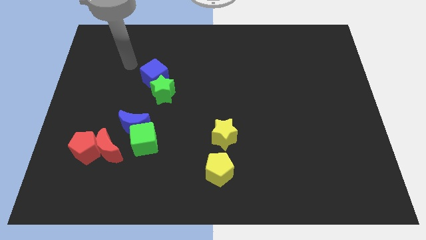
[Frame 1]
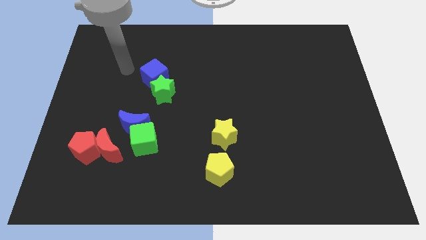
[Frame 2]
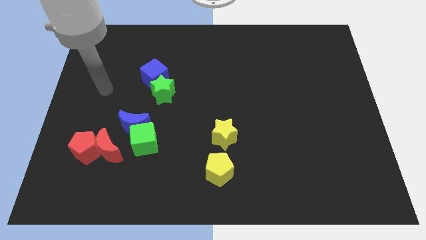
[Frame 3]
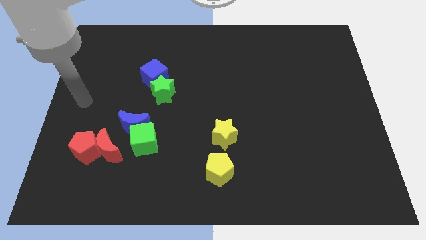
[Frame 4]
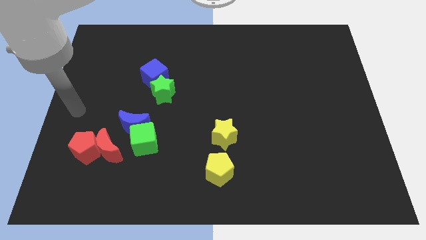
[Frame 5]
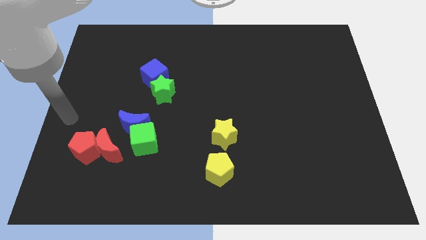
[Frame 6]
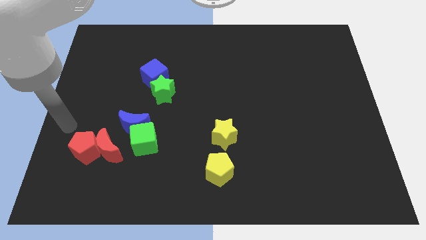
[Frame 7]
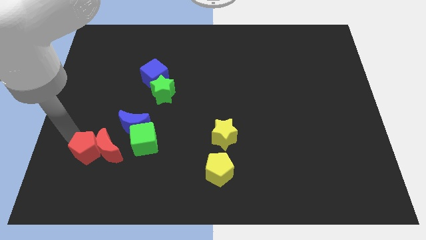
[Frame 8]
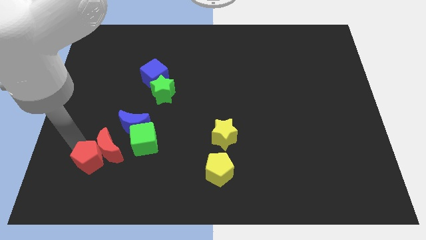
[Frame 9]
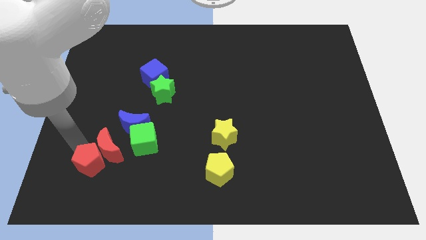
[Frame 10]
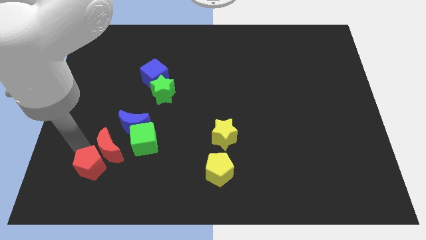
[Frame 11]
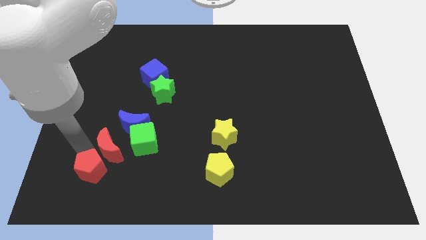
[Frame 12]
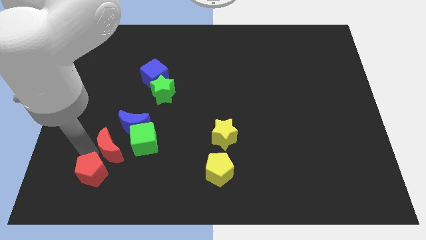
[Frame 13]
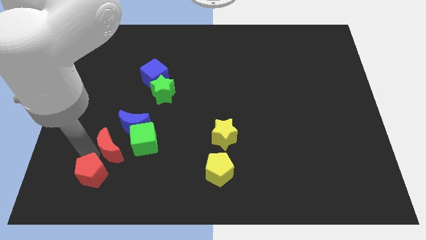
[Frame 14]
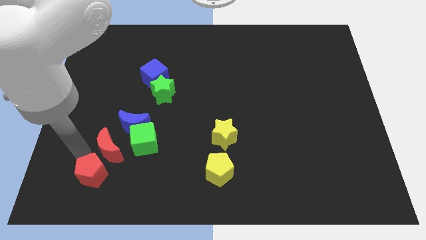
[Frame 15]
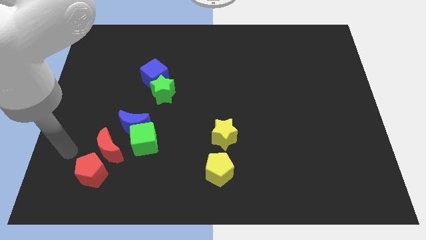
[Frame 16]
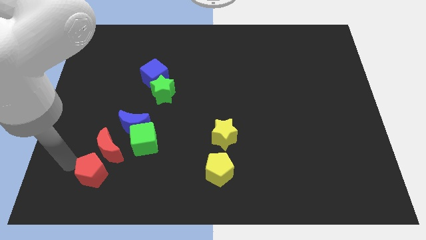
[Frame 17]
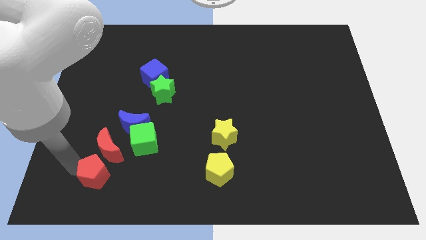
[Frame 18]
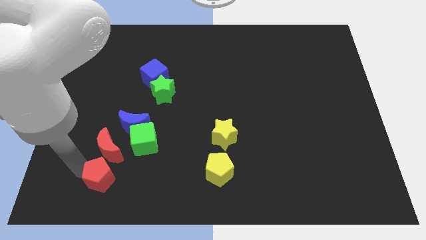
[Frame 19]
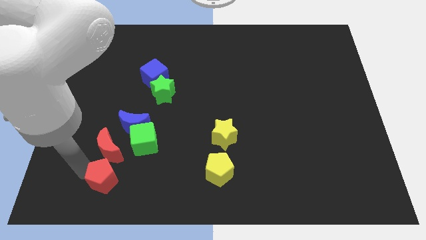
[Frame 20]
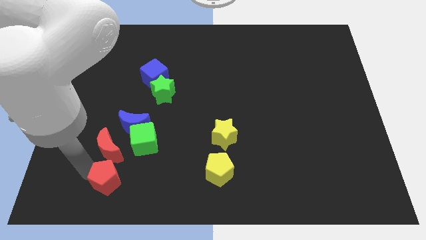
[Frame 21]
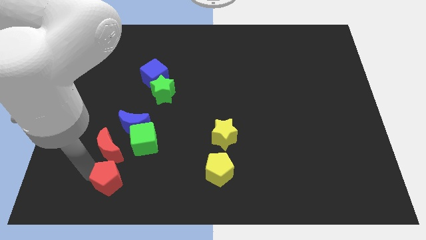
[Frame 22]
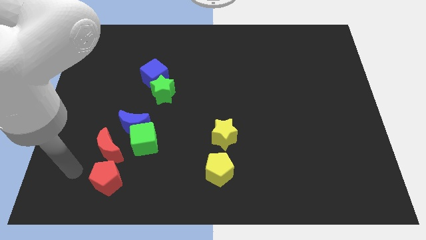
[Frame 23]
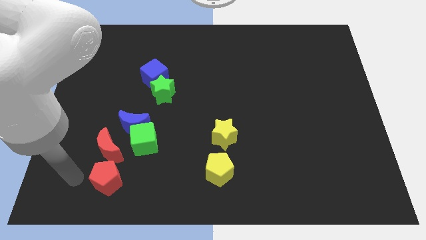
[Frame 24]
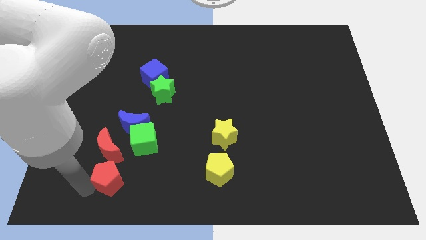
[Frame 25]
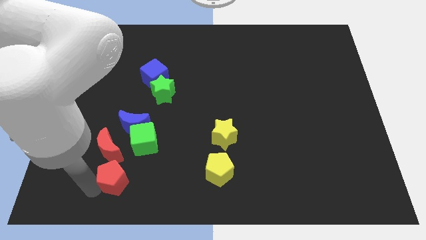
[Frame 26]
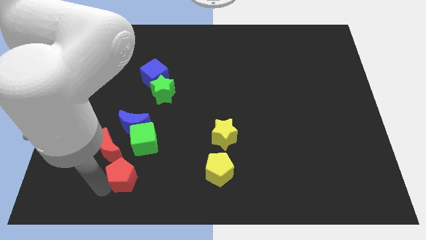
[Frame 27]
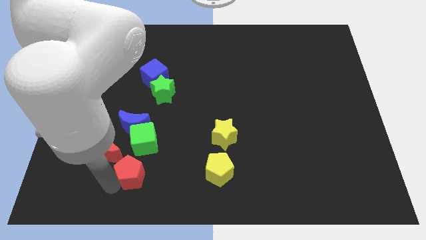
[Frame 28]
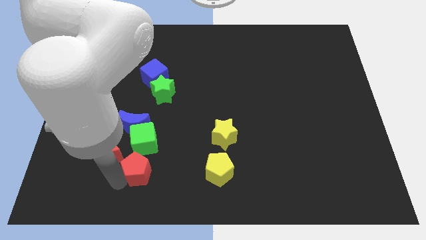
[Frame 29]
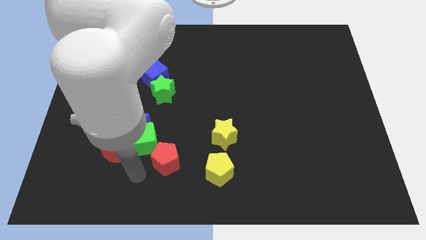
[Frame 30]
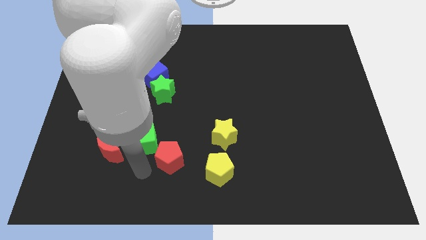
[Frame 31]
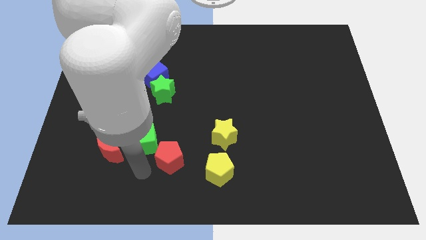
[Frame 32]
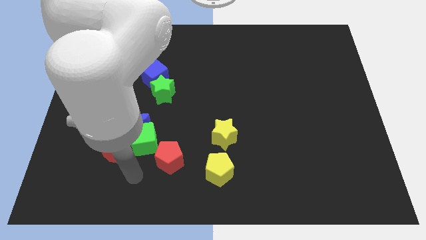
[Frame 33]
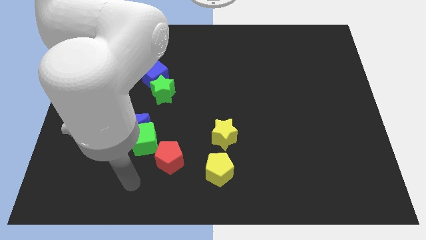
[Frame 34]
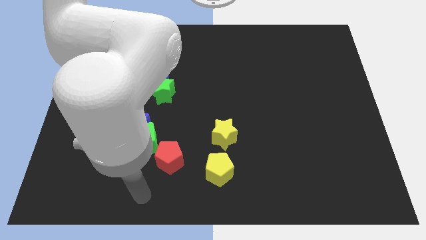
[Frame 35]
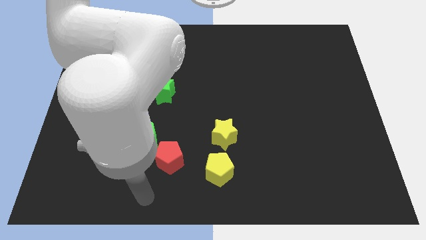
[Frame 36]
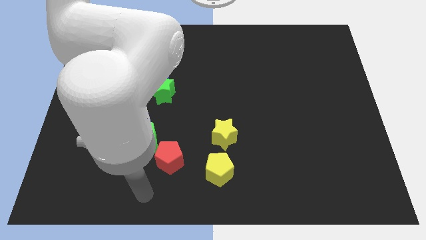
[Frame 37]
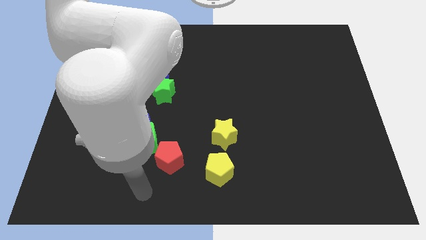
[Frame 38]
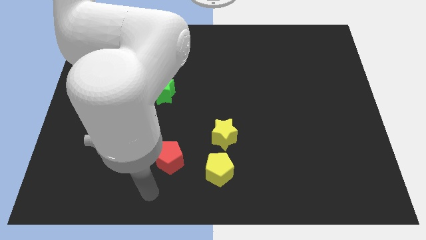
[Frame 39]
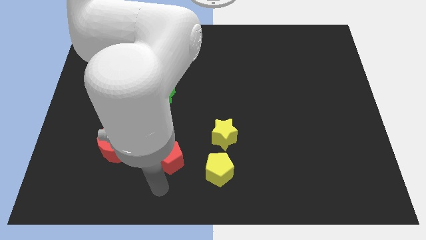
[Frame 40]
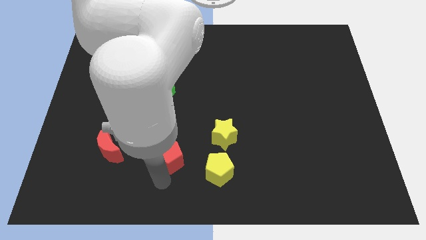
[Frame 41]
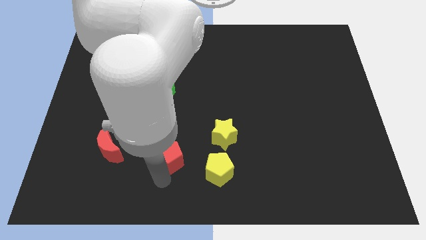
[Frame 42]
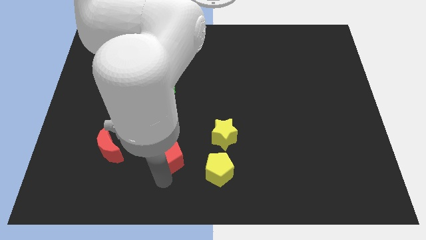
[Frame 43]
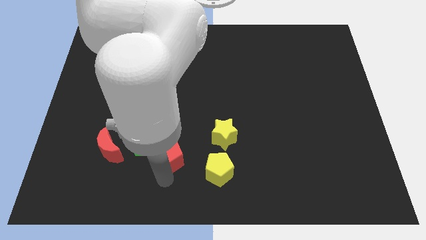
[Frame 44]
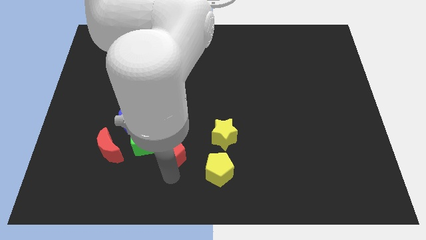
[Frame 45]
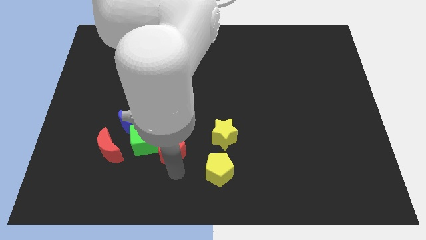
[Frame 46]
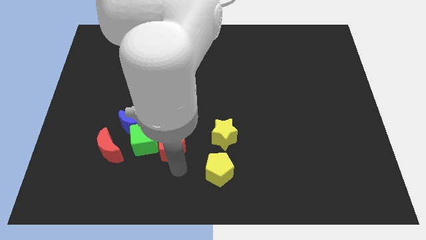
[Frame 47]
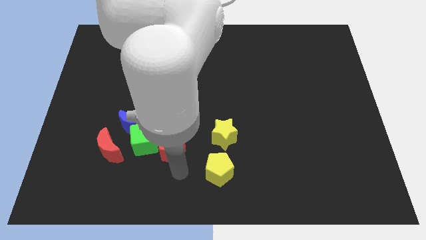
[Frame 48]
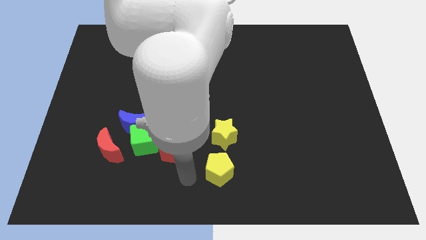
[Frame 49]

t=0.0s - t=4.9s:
slide the red pentagon next to the green cube

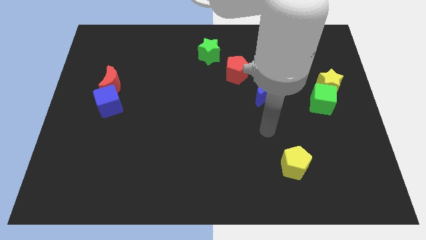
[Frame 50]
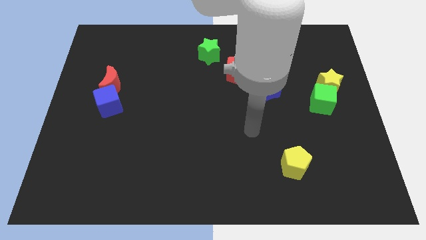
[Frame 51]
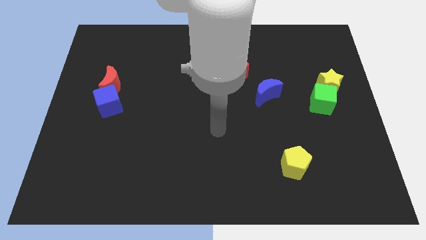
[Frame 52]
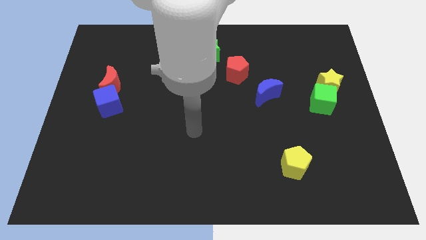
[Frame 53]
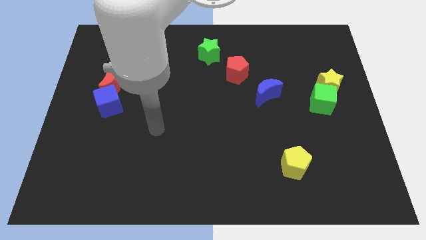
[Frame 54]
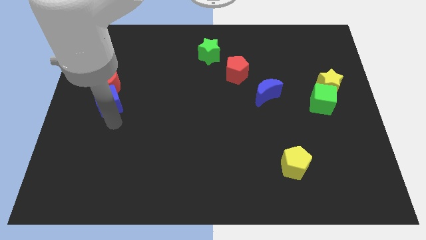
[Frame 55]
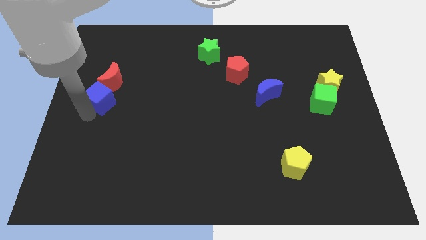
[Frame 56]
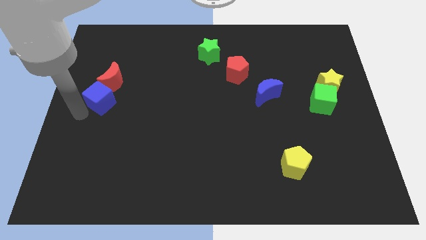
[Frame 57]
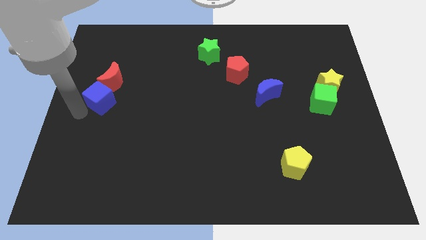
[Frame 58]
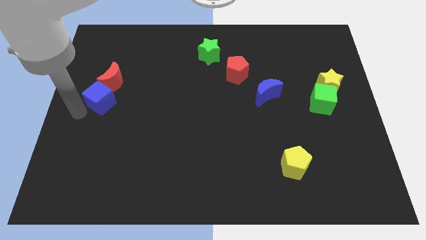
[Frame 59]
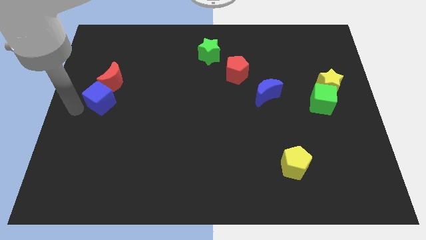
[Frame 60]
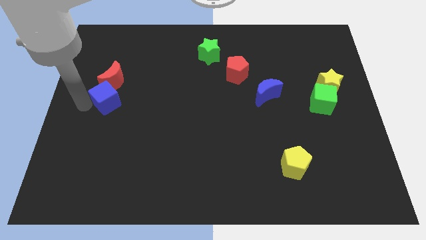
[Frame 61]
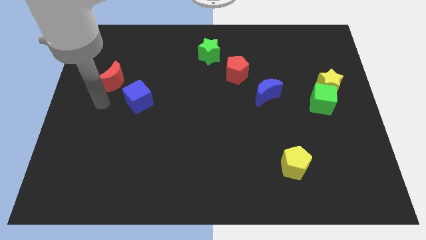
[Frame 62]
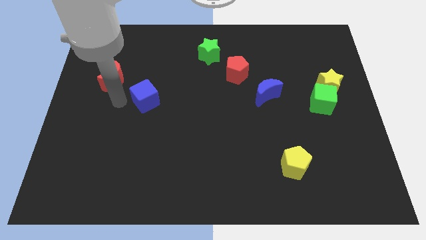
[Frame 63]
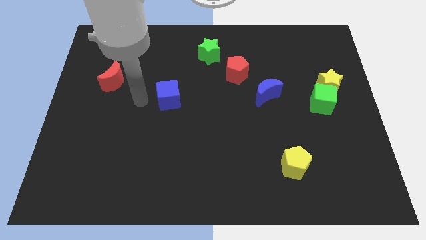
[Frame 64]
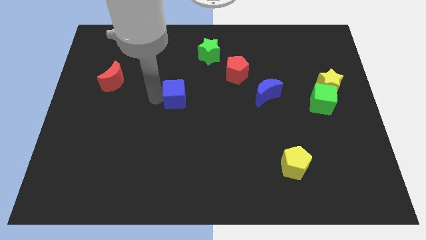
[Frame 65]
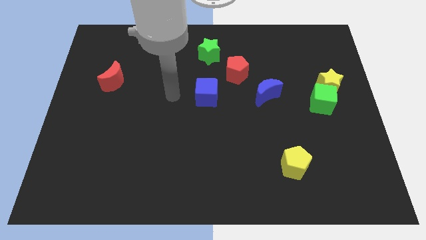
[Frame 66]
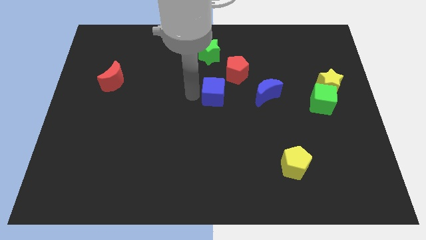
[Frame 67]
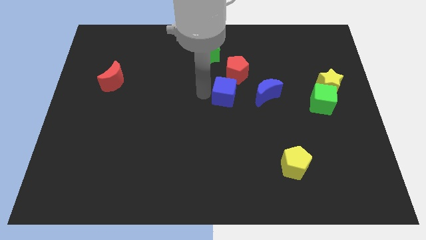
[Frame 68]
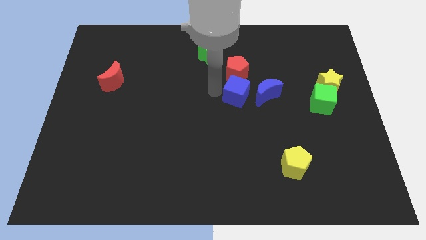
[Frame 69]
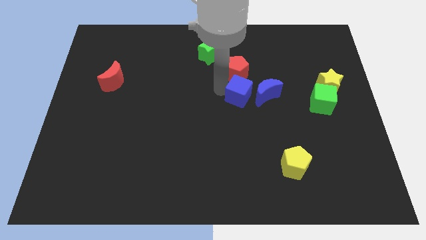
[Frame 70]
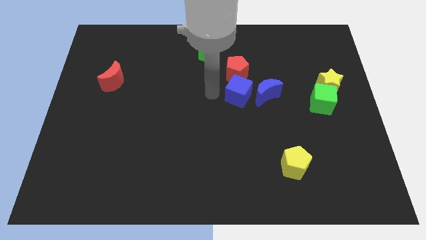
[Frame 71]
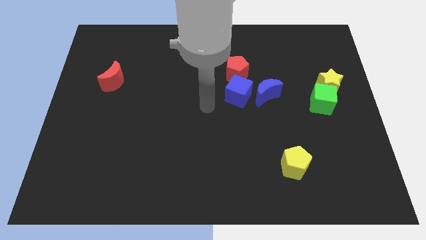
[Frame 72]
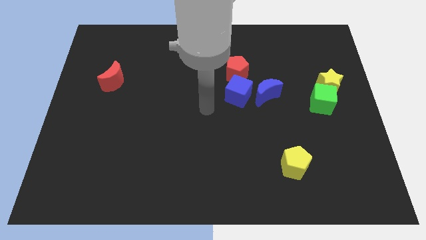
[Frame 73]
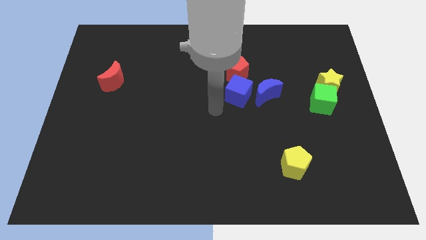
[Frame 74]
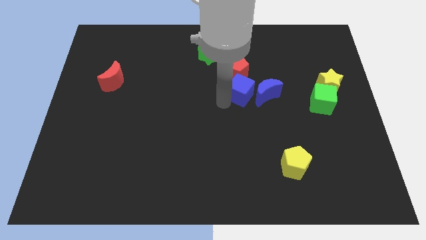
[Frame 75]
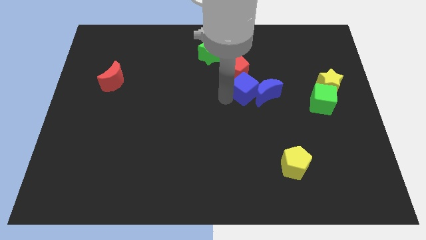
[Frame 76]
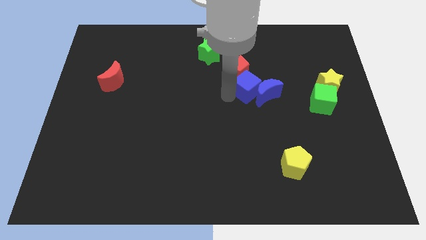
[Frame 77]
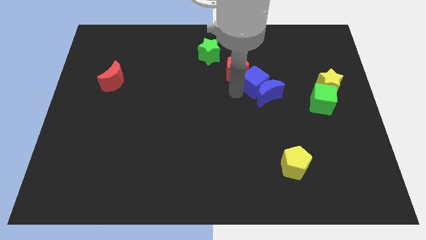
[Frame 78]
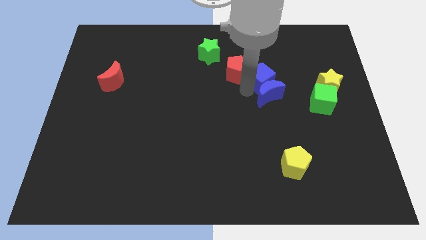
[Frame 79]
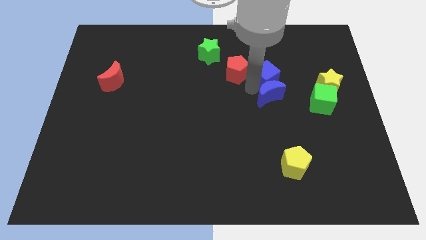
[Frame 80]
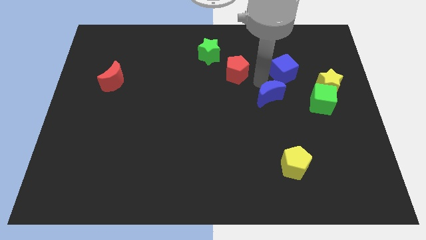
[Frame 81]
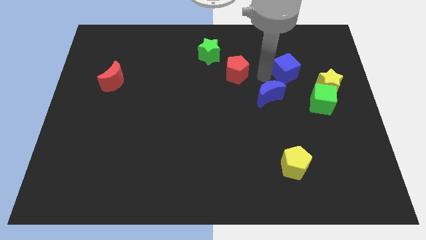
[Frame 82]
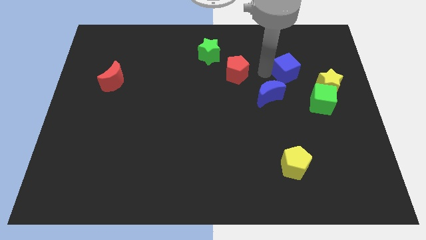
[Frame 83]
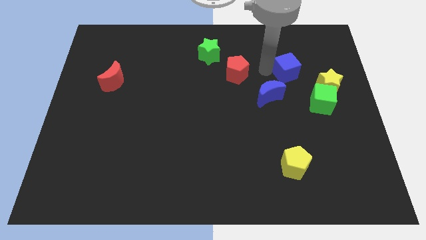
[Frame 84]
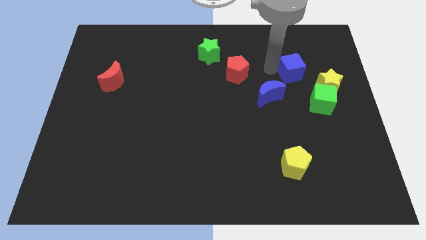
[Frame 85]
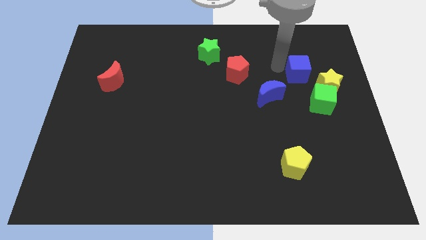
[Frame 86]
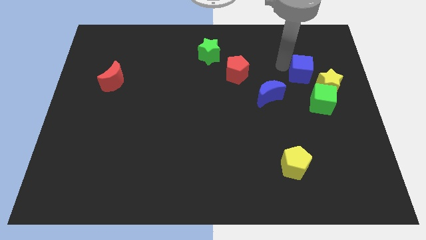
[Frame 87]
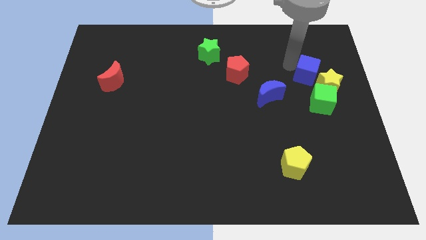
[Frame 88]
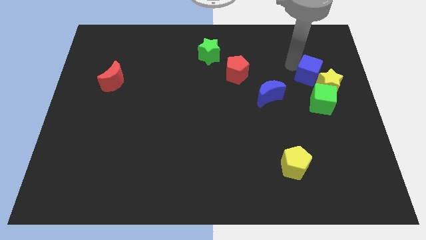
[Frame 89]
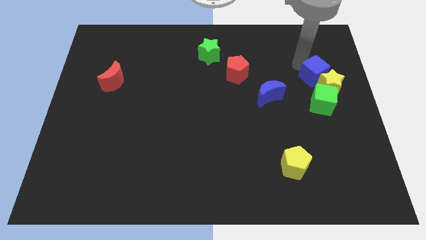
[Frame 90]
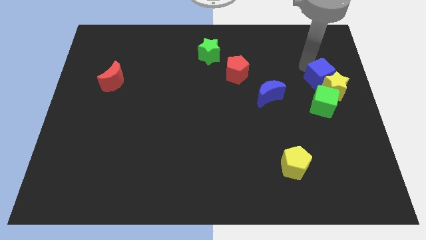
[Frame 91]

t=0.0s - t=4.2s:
push the blue cube to the yellow star
